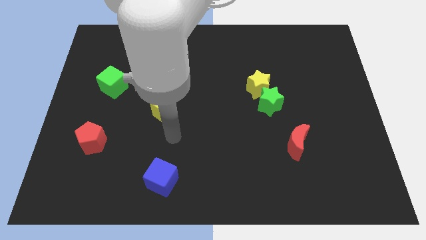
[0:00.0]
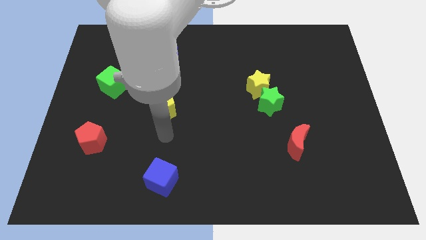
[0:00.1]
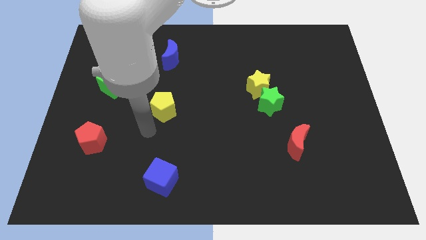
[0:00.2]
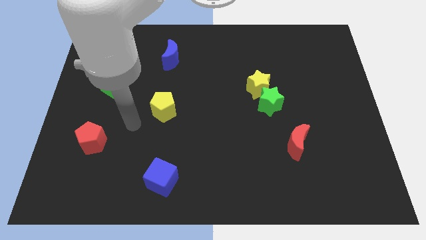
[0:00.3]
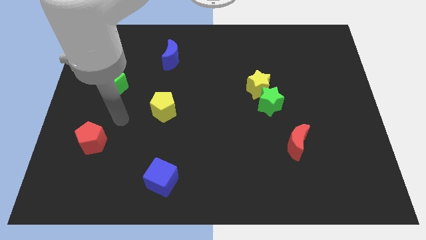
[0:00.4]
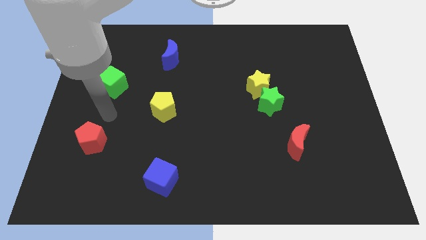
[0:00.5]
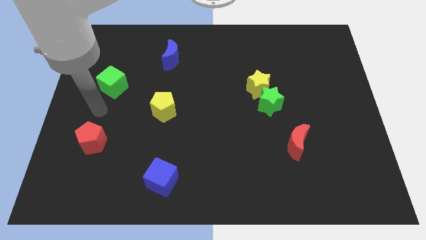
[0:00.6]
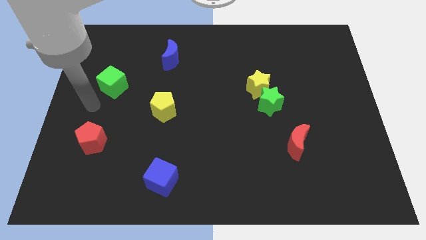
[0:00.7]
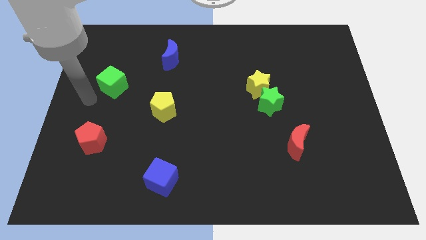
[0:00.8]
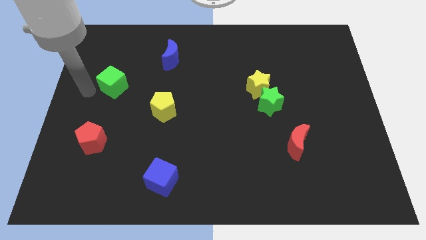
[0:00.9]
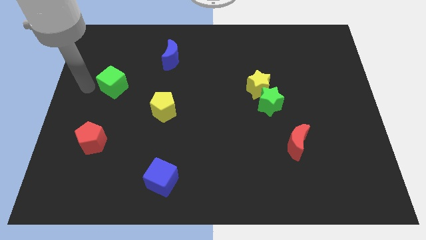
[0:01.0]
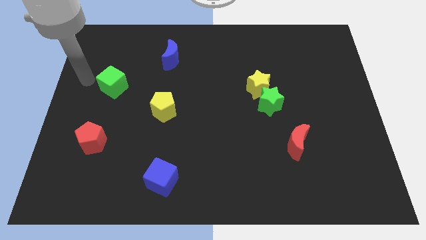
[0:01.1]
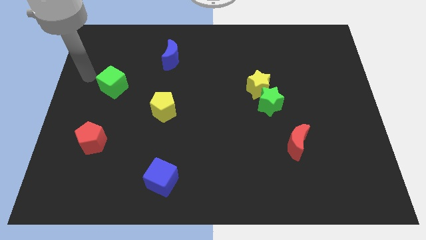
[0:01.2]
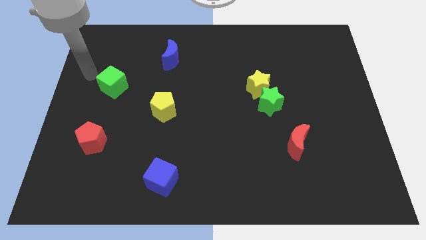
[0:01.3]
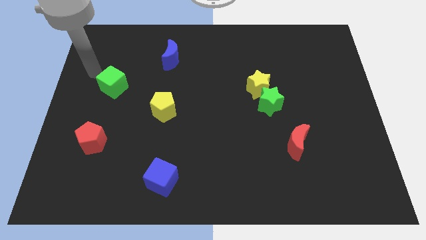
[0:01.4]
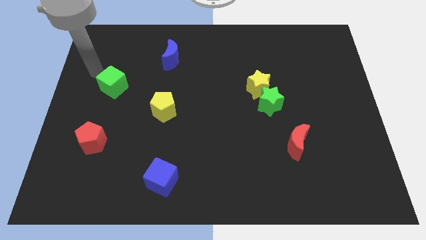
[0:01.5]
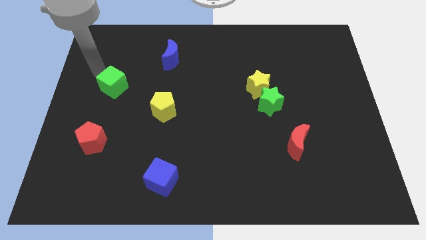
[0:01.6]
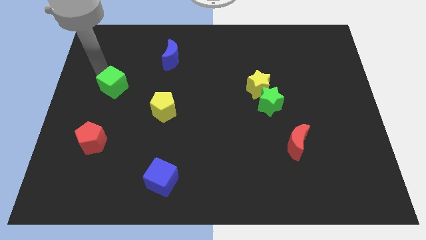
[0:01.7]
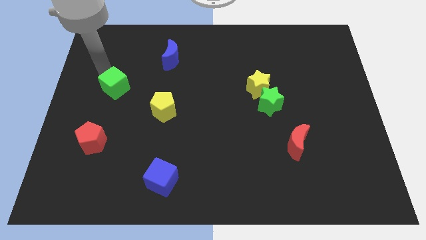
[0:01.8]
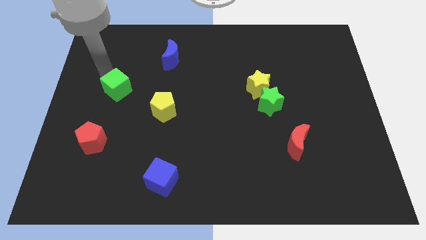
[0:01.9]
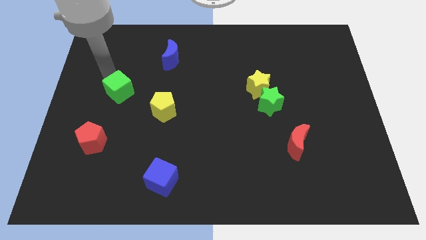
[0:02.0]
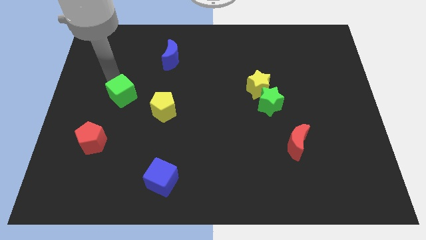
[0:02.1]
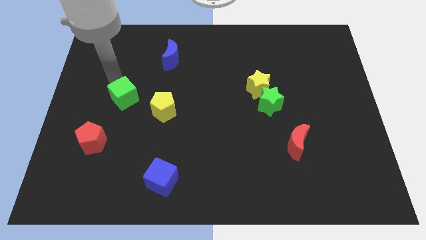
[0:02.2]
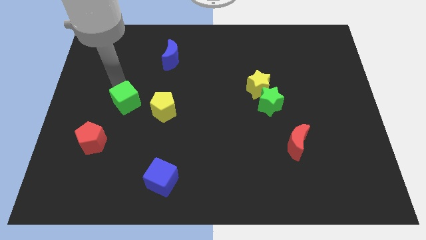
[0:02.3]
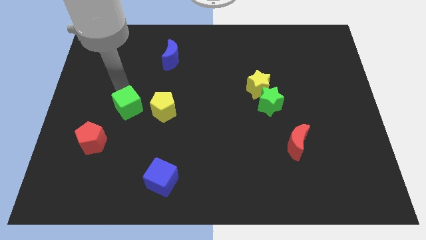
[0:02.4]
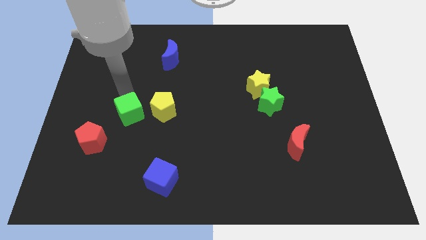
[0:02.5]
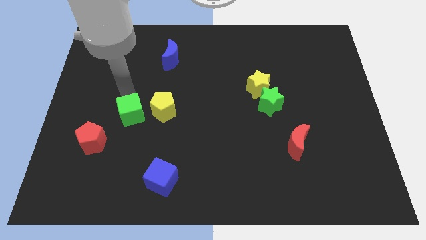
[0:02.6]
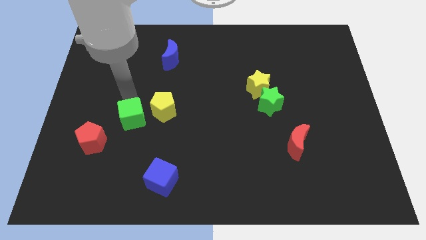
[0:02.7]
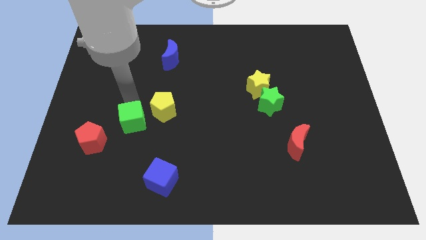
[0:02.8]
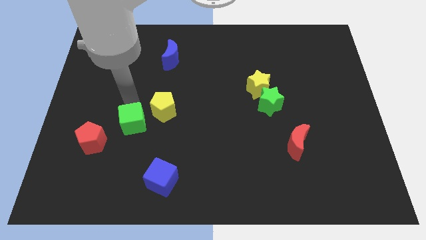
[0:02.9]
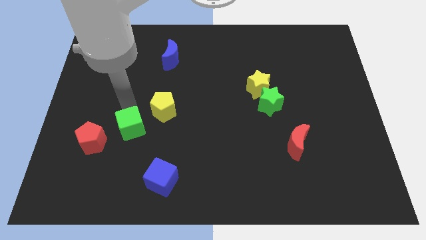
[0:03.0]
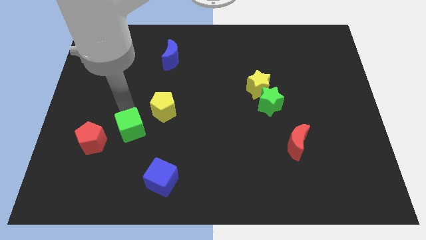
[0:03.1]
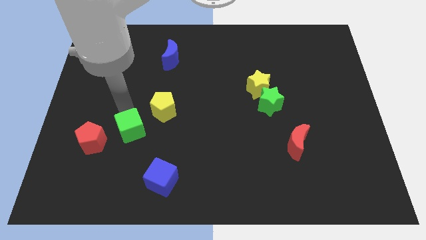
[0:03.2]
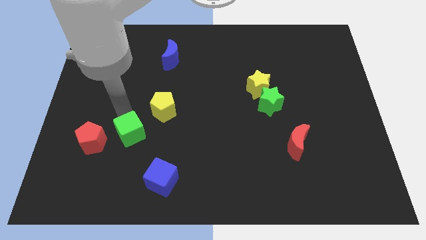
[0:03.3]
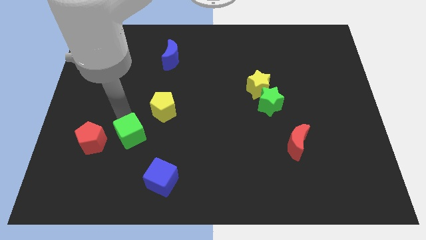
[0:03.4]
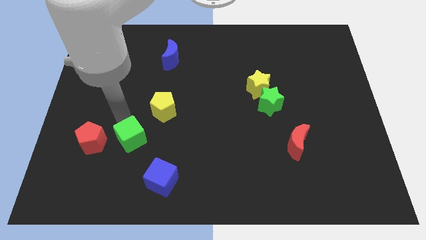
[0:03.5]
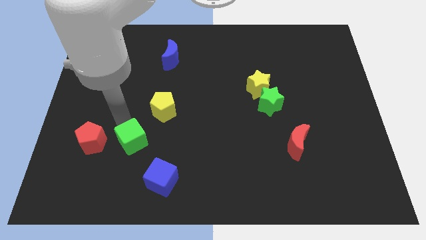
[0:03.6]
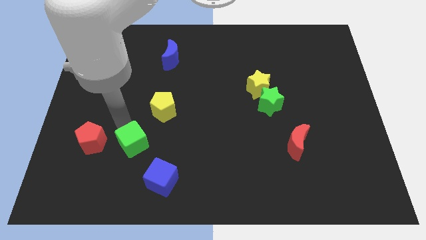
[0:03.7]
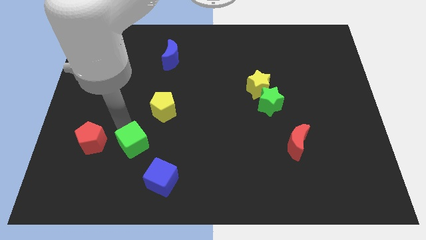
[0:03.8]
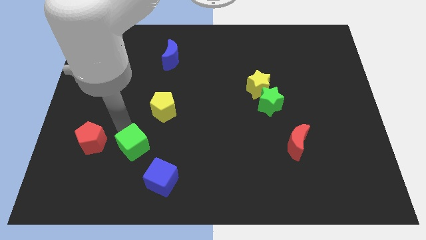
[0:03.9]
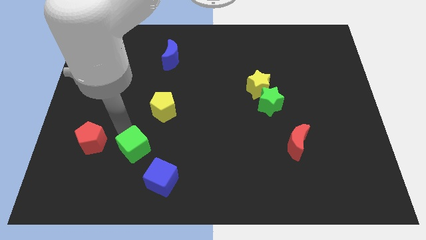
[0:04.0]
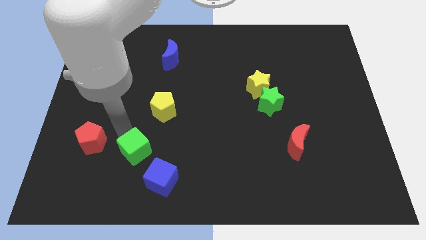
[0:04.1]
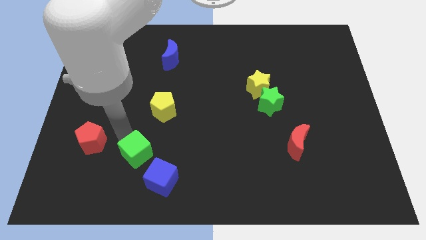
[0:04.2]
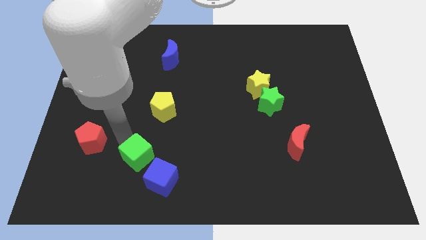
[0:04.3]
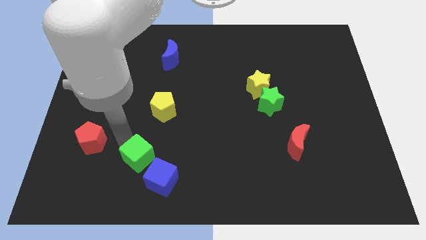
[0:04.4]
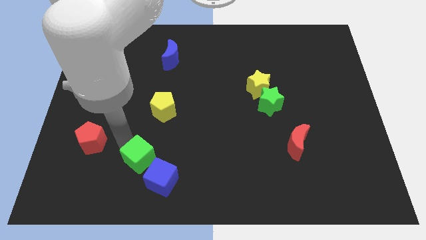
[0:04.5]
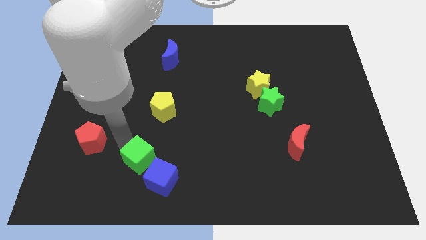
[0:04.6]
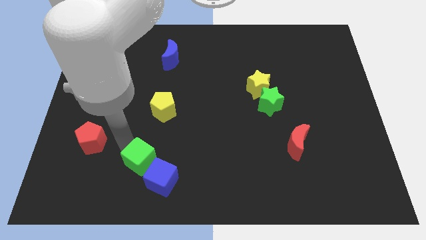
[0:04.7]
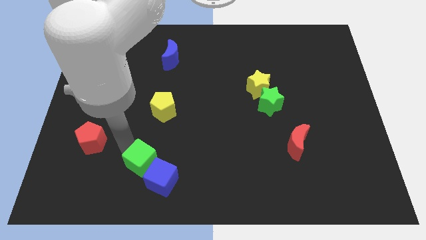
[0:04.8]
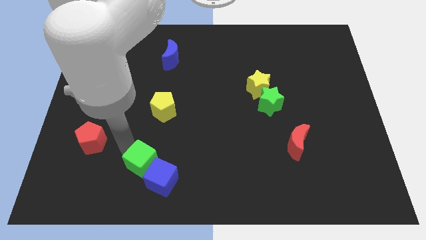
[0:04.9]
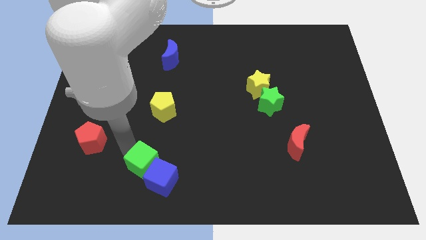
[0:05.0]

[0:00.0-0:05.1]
push the green cube next to the blue cube

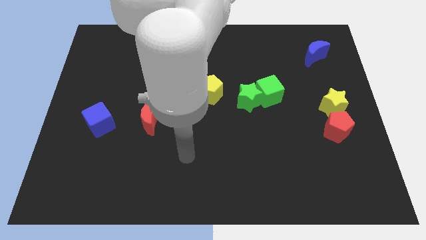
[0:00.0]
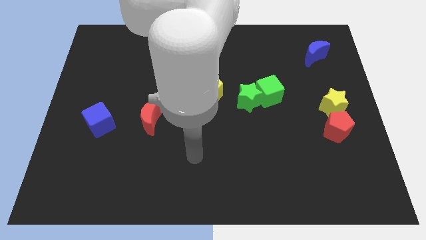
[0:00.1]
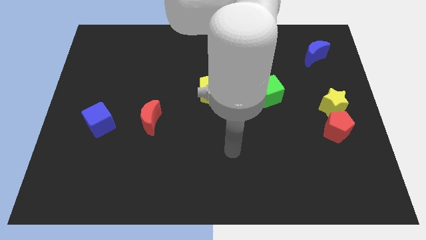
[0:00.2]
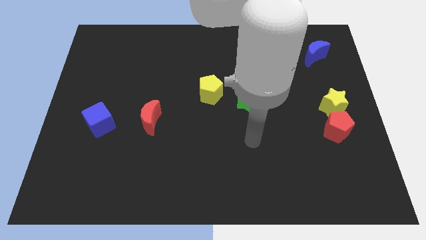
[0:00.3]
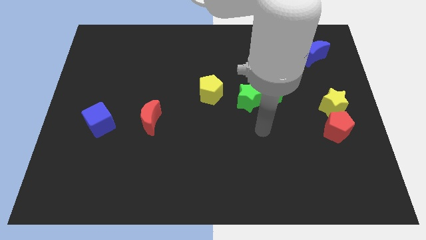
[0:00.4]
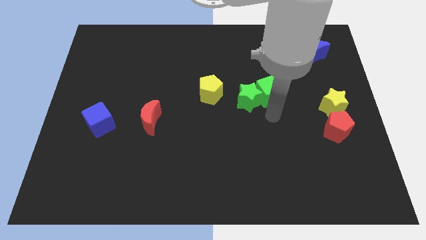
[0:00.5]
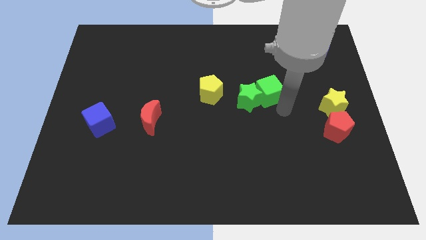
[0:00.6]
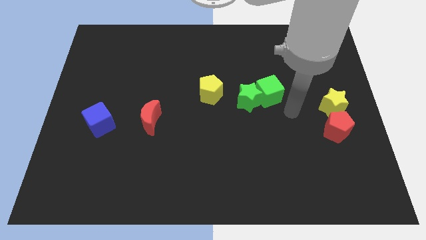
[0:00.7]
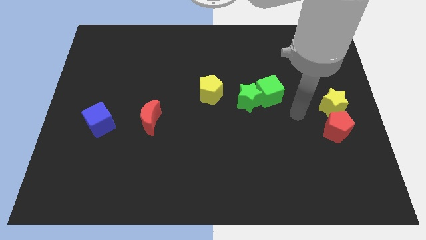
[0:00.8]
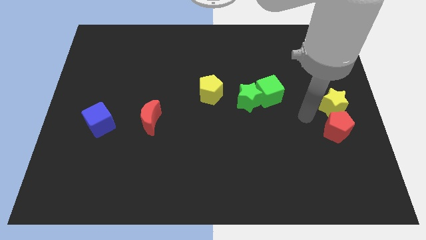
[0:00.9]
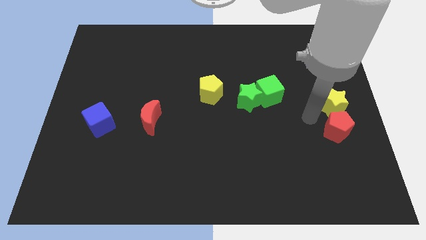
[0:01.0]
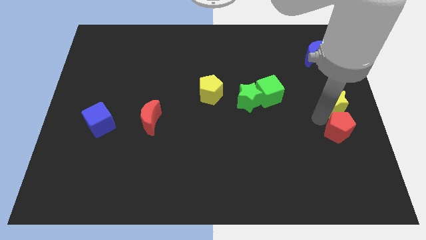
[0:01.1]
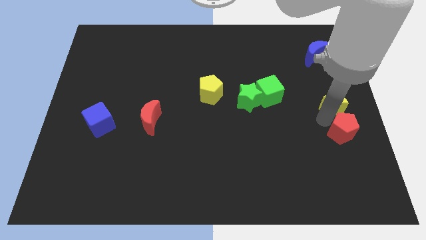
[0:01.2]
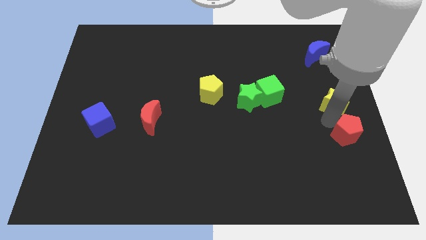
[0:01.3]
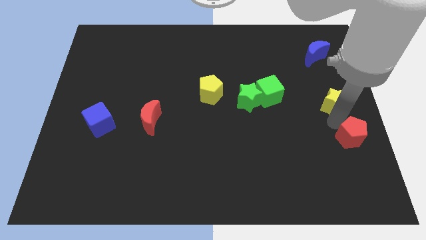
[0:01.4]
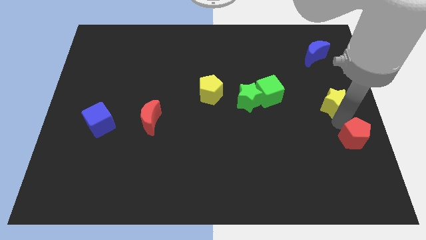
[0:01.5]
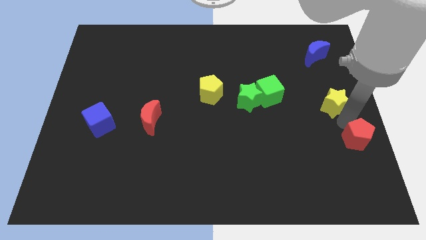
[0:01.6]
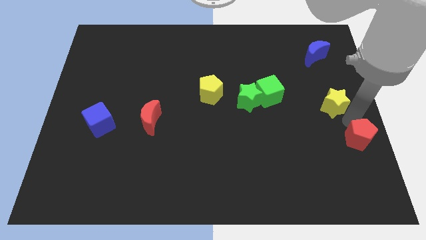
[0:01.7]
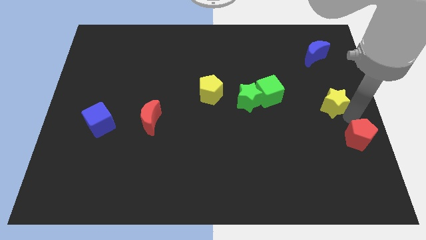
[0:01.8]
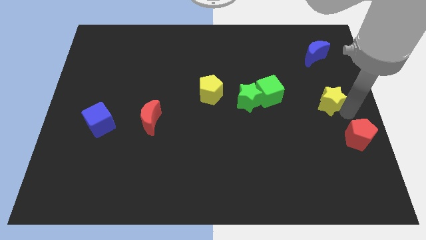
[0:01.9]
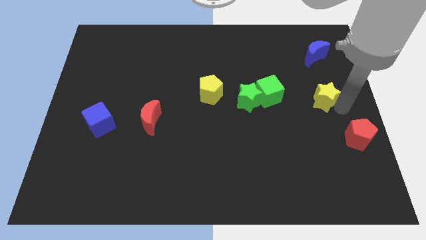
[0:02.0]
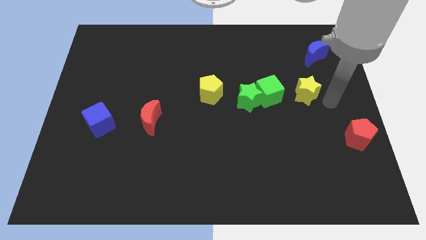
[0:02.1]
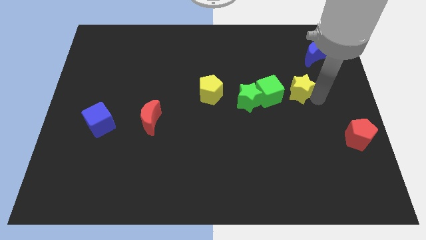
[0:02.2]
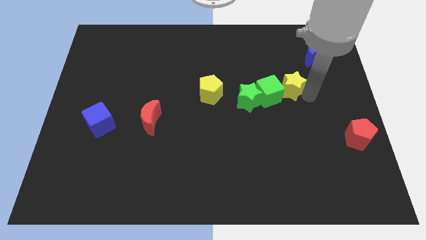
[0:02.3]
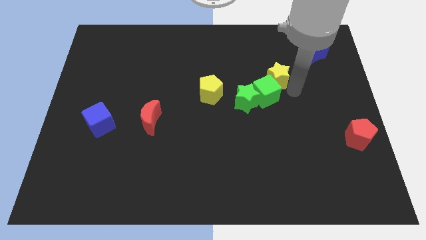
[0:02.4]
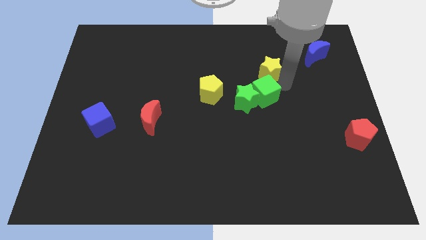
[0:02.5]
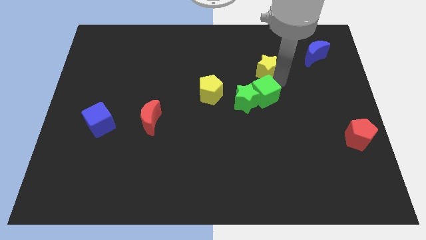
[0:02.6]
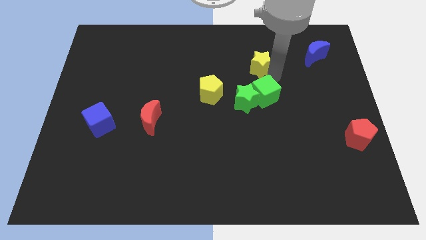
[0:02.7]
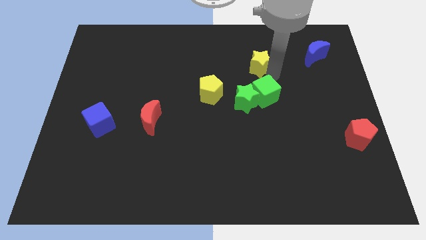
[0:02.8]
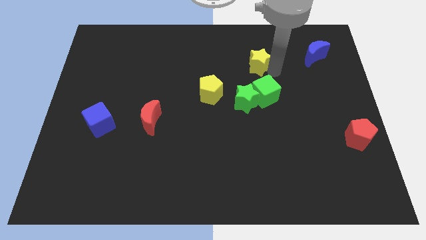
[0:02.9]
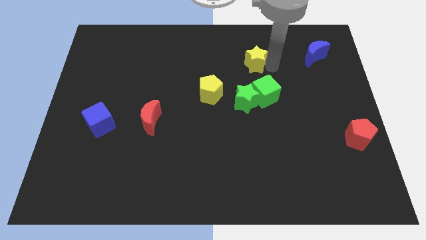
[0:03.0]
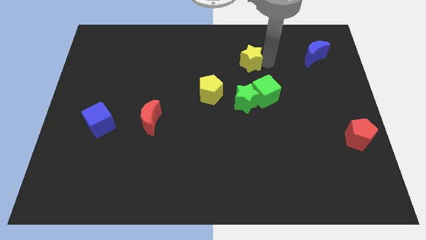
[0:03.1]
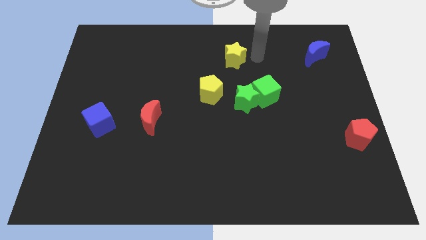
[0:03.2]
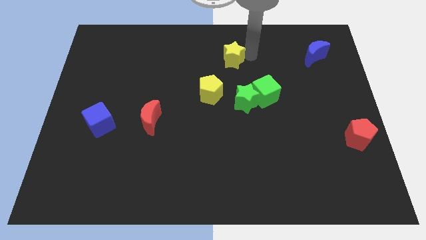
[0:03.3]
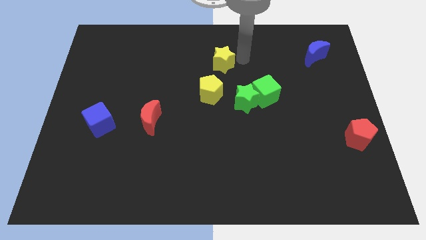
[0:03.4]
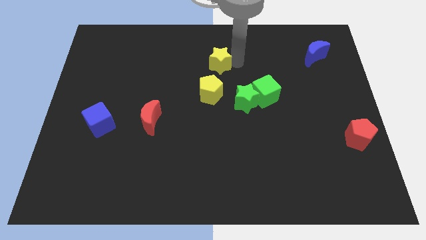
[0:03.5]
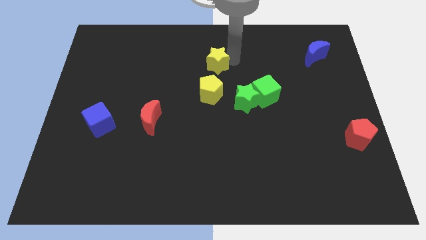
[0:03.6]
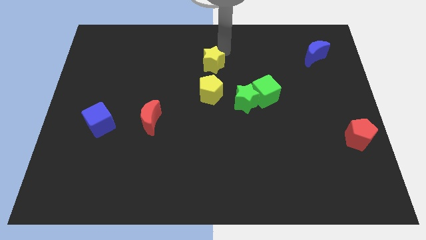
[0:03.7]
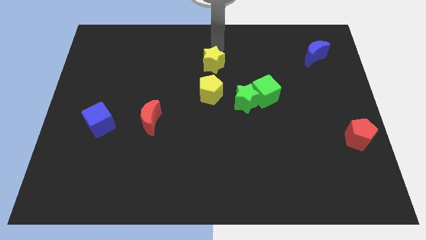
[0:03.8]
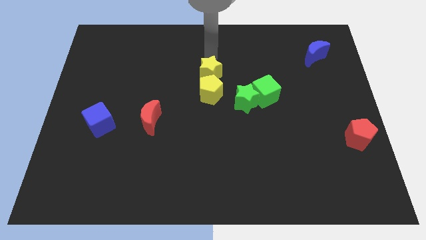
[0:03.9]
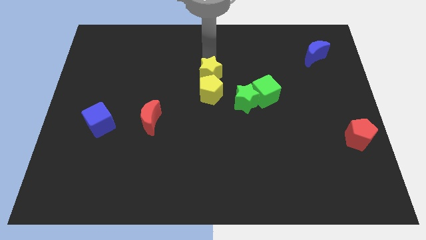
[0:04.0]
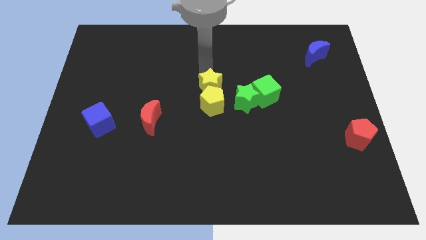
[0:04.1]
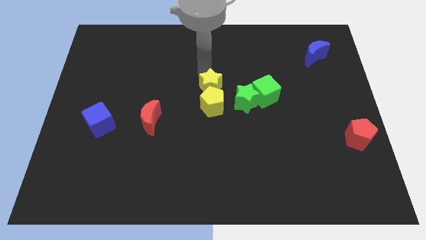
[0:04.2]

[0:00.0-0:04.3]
push the yellow star next to the yellow pentagon
